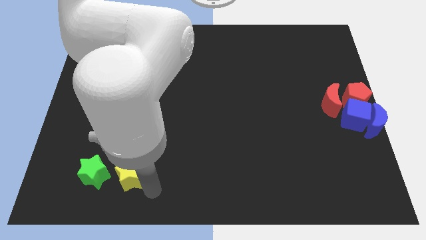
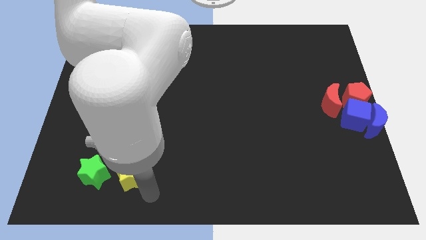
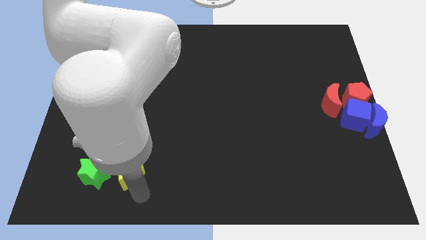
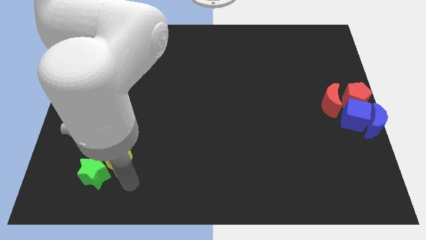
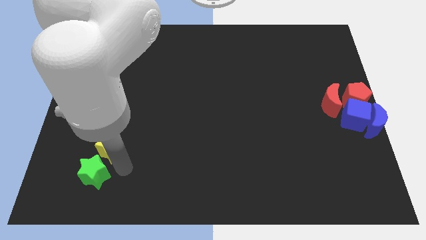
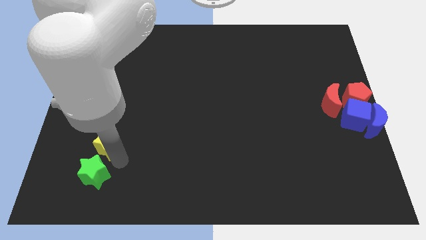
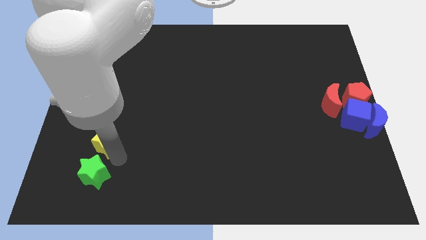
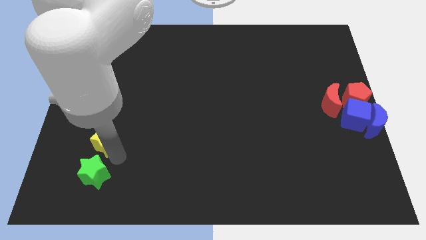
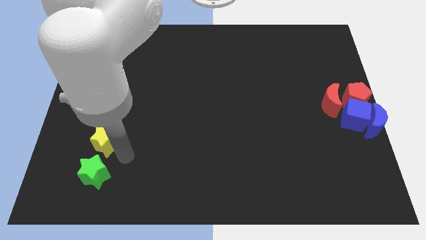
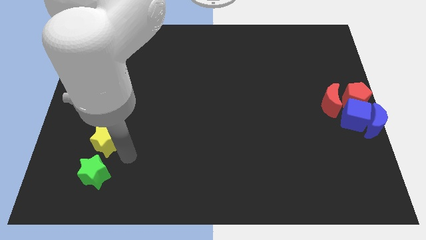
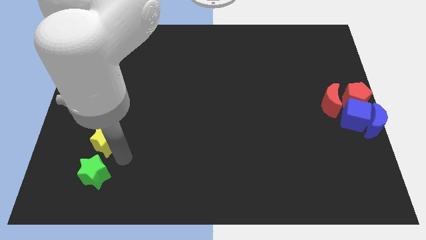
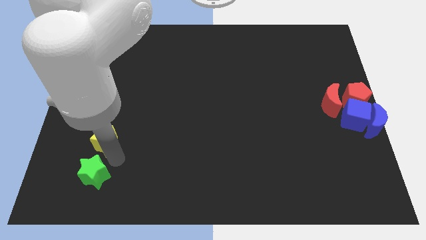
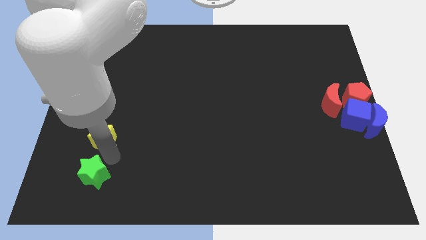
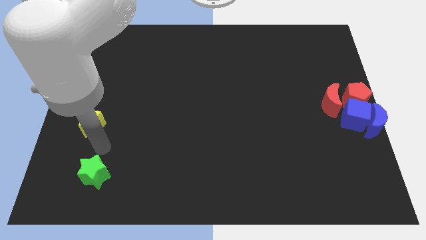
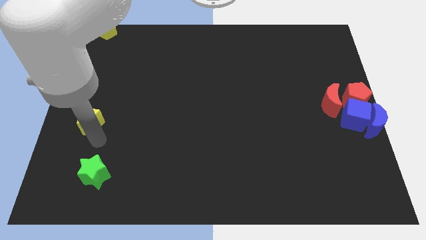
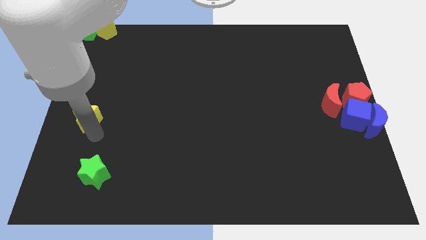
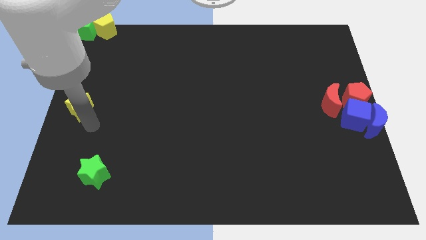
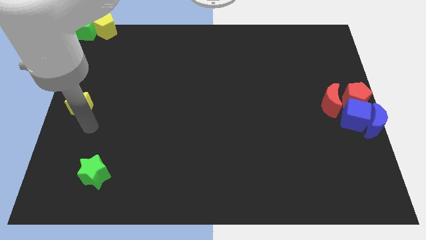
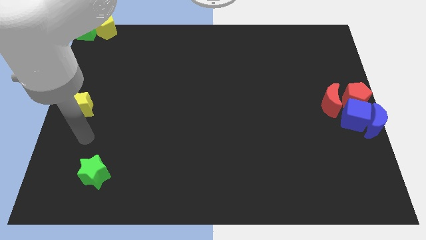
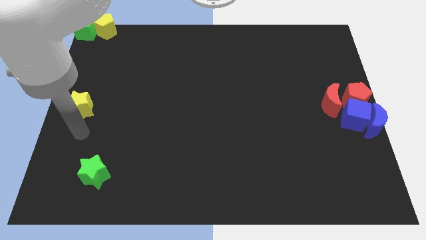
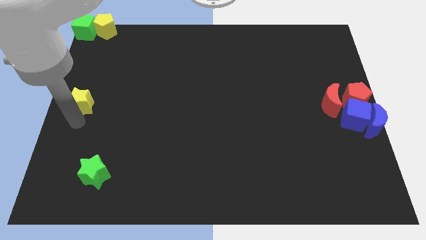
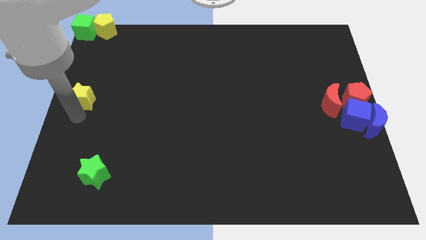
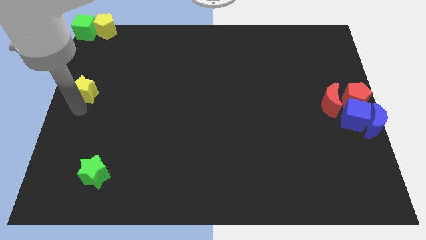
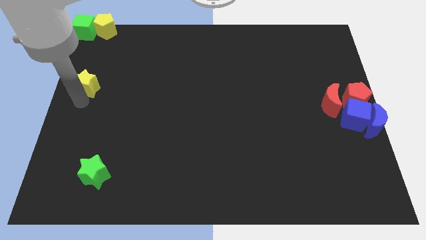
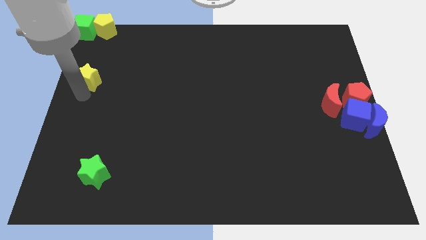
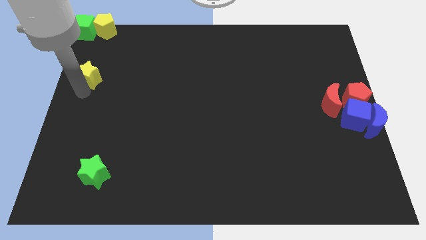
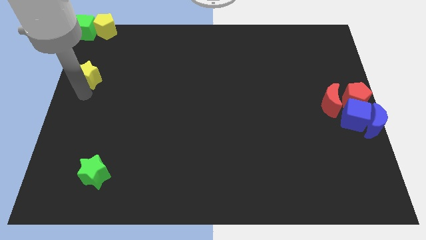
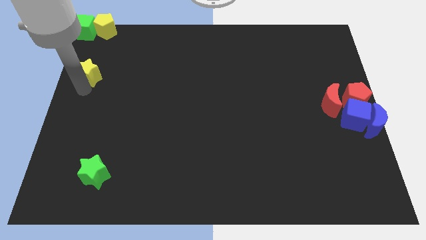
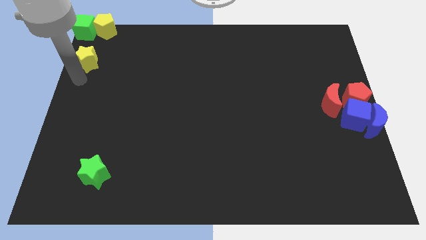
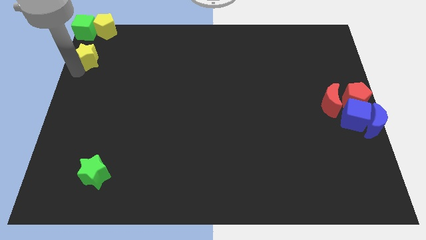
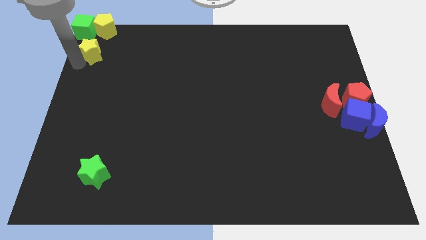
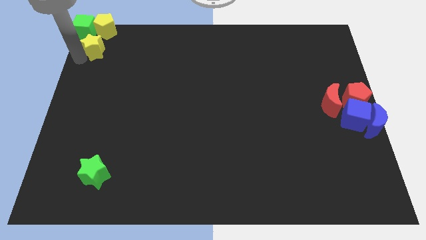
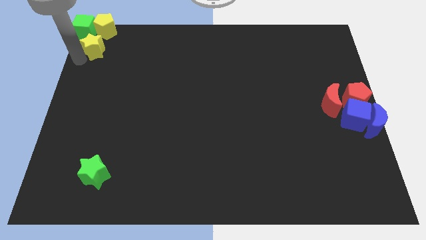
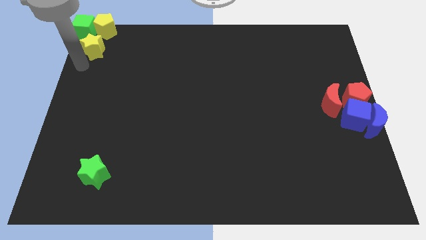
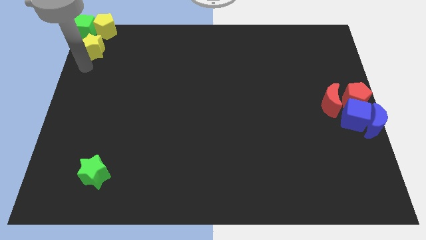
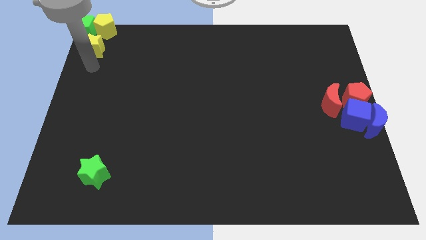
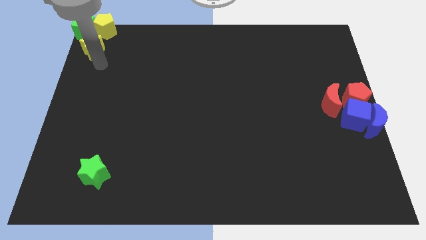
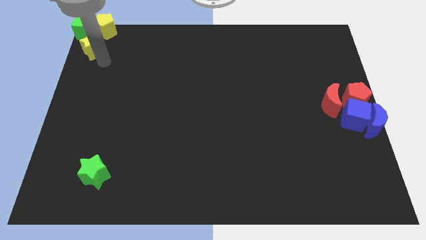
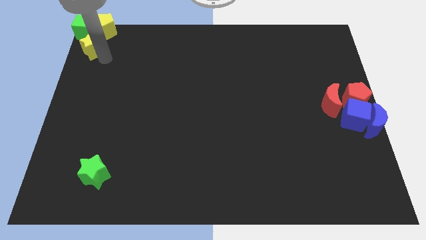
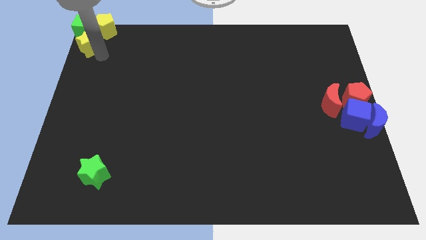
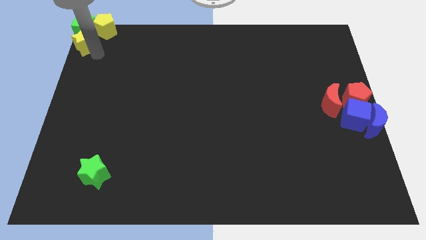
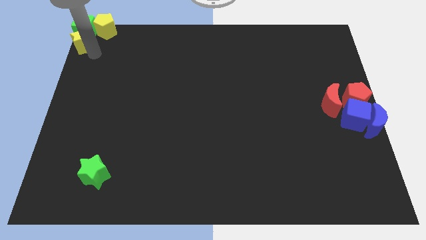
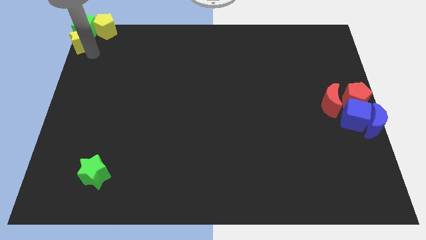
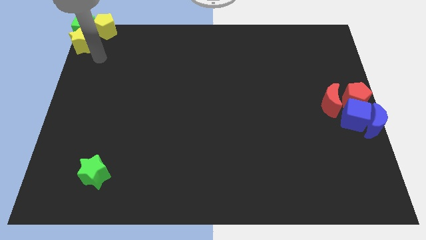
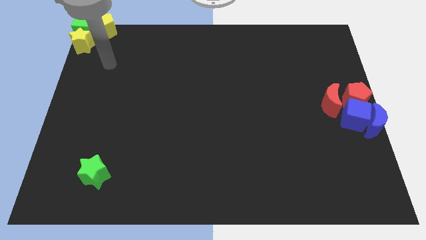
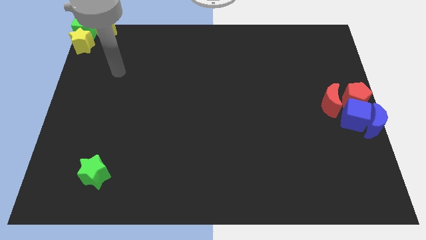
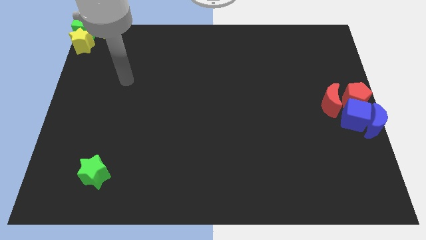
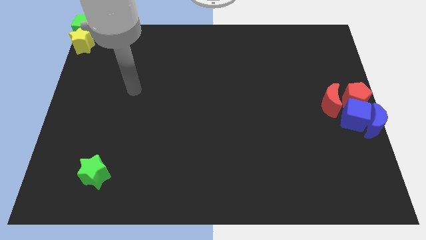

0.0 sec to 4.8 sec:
move the yellow star to the bottom side of the green cube

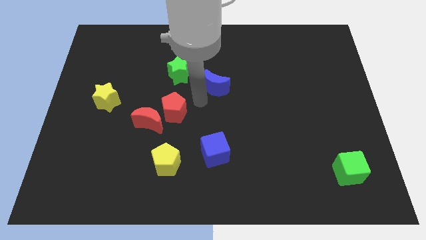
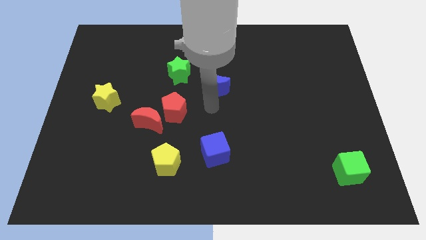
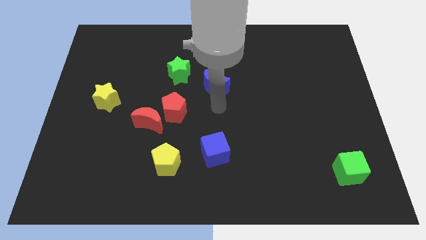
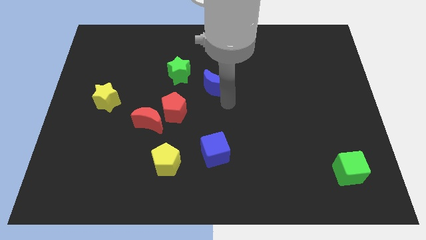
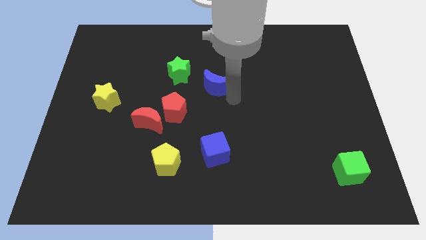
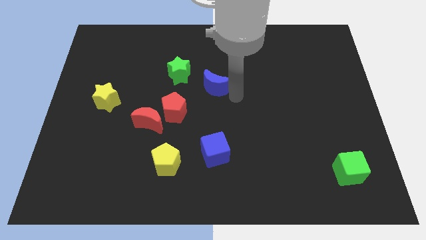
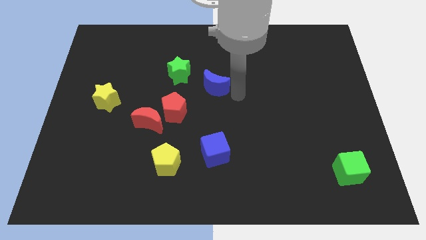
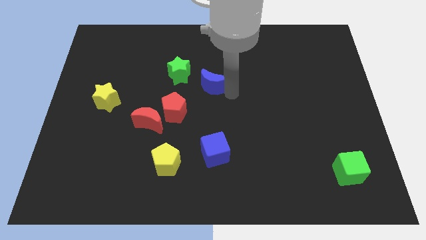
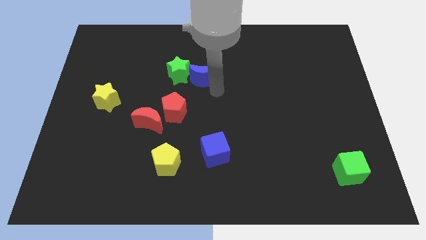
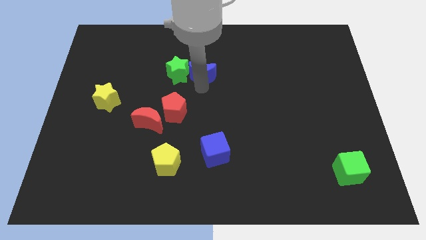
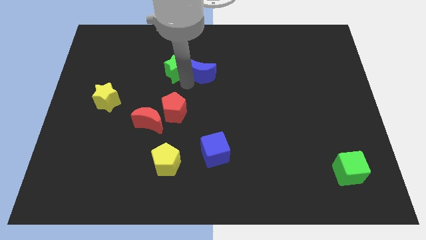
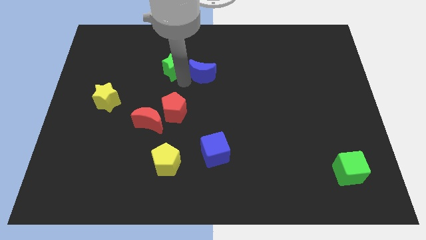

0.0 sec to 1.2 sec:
push the blue crescent towards the right side of the green star

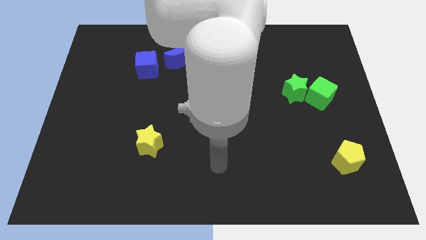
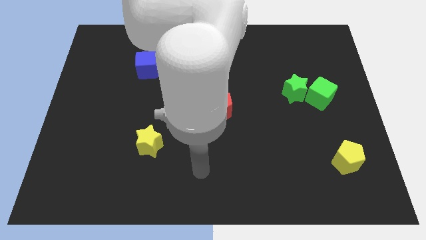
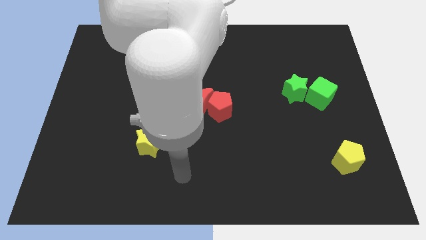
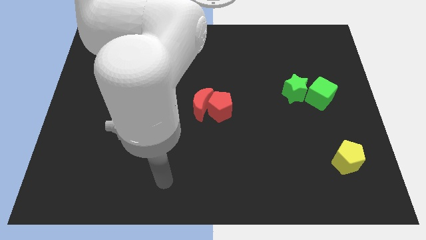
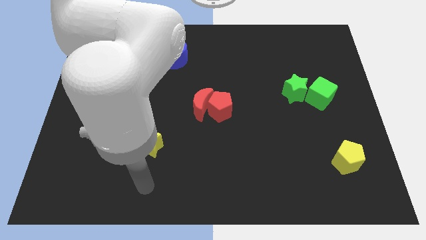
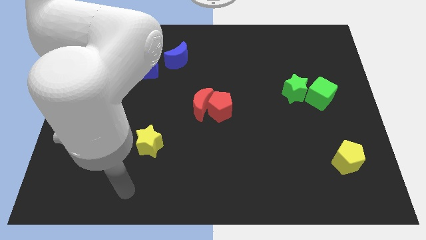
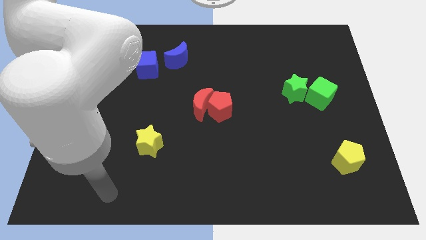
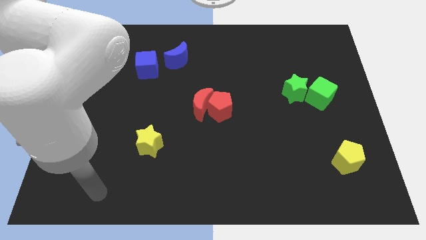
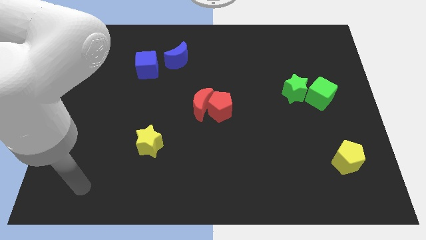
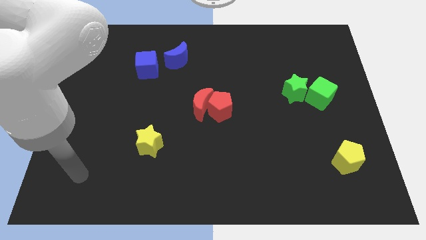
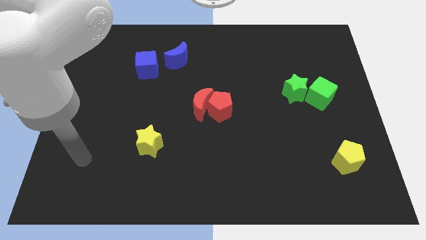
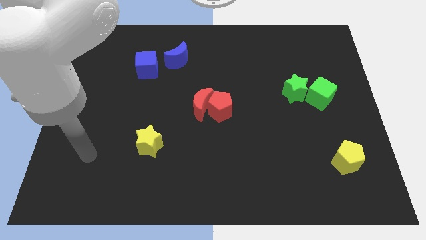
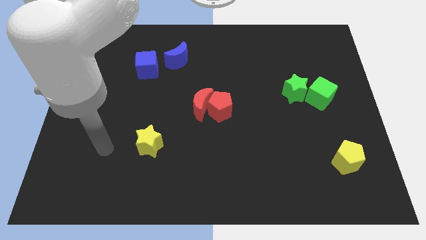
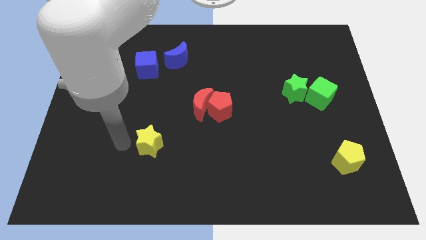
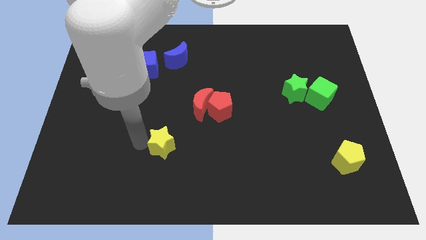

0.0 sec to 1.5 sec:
place your arm at the left of the yellow star

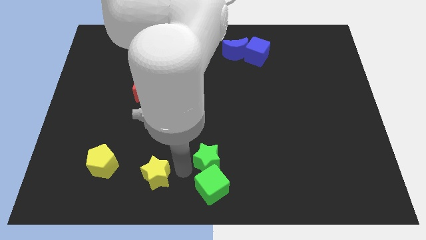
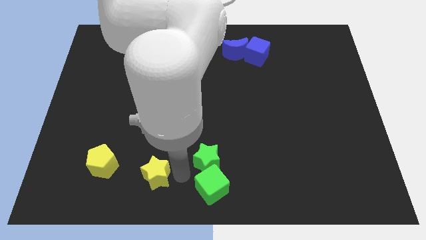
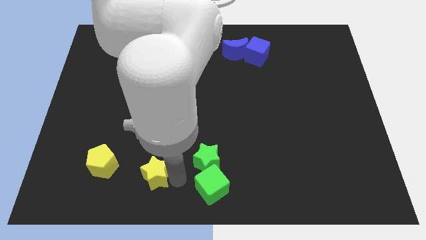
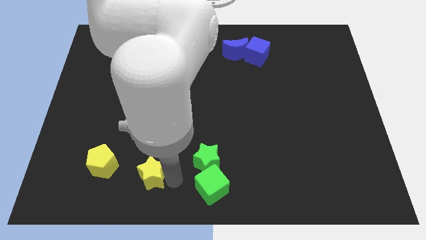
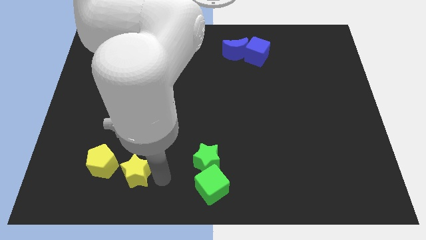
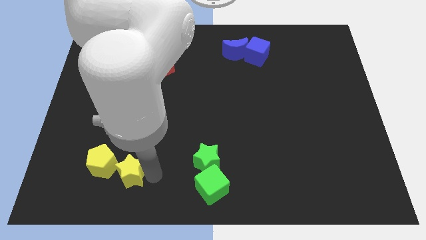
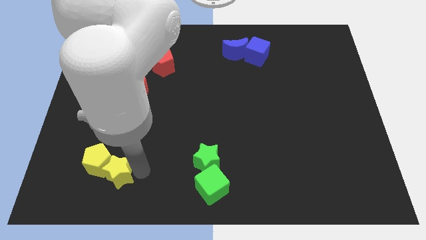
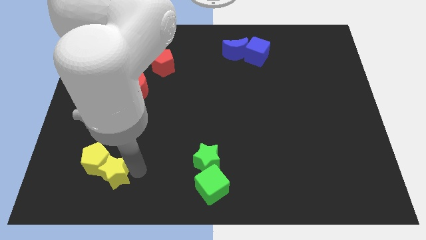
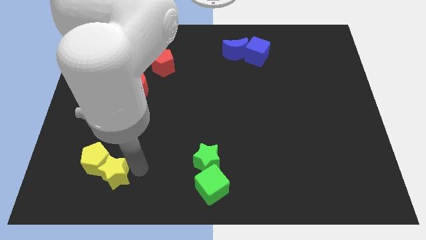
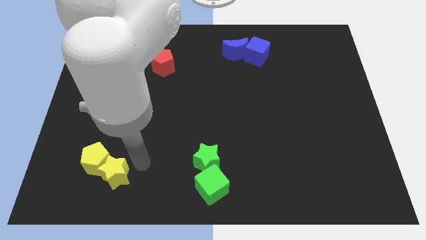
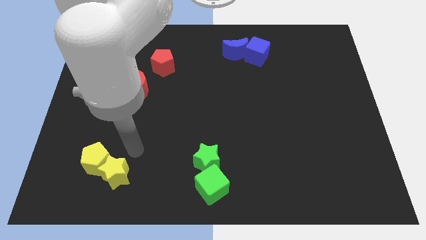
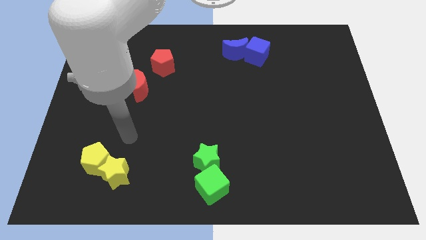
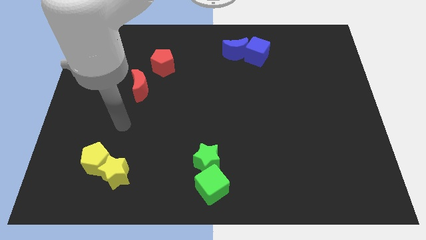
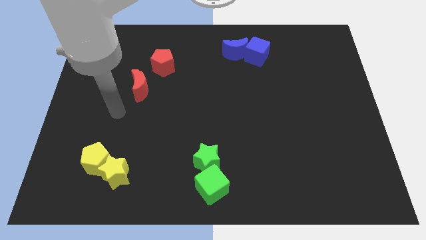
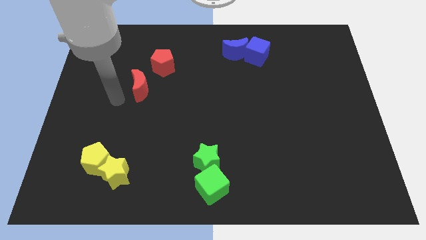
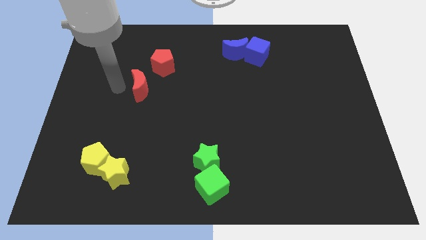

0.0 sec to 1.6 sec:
push yellow star slightly towards yellow pentagon

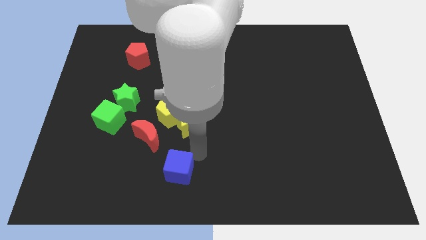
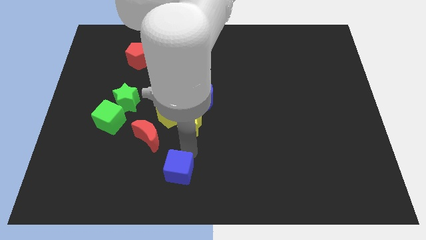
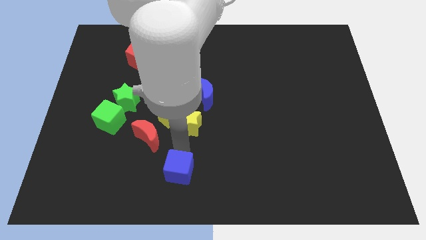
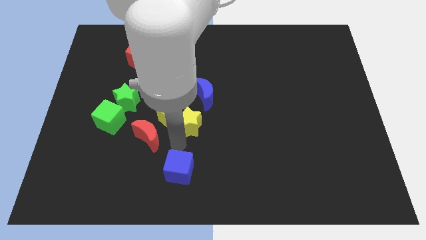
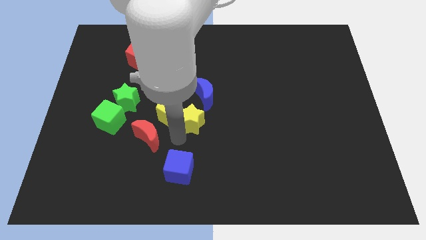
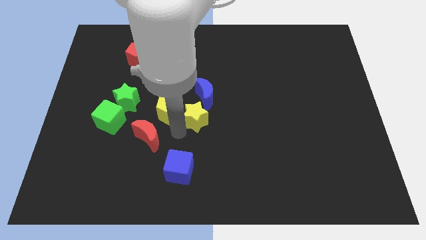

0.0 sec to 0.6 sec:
touch the bottom of yellow star
